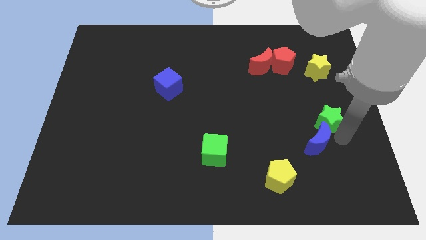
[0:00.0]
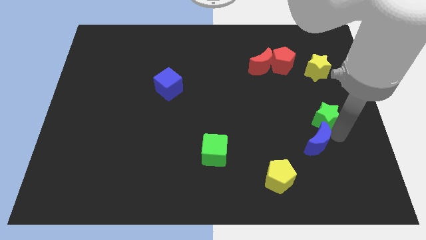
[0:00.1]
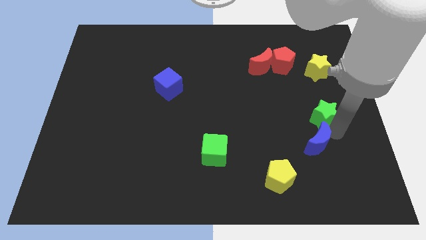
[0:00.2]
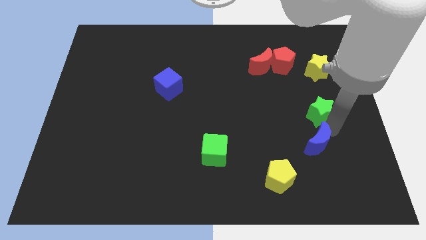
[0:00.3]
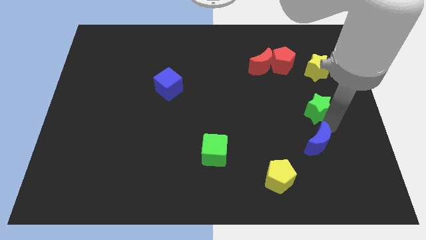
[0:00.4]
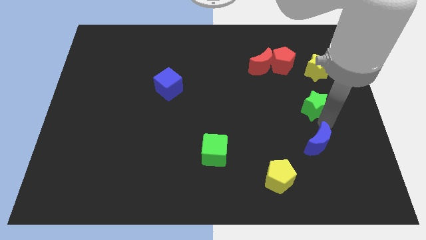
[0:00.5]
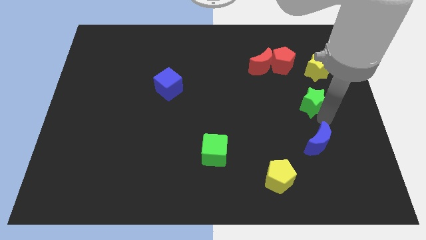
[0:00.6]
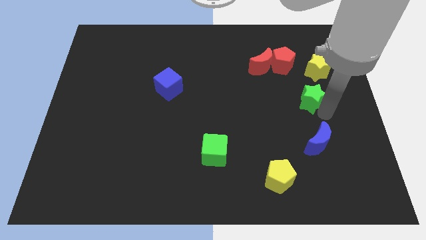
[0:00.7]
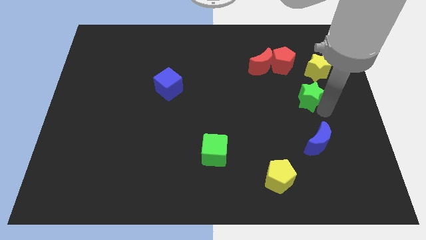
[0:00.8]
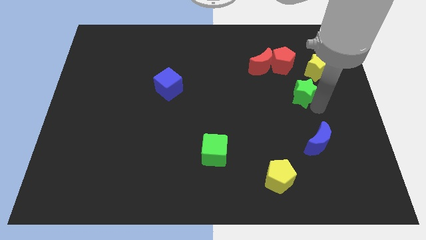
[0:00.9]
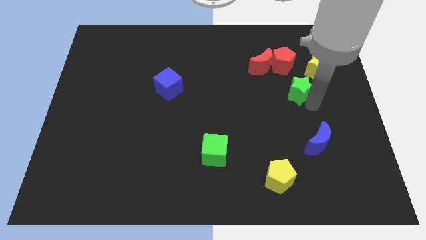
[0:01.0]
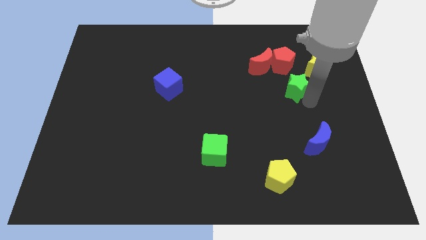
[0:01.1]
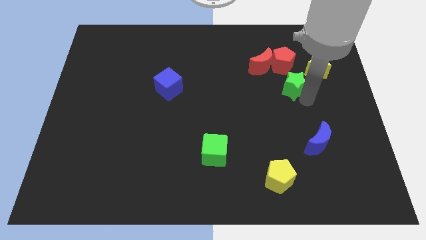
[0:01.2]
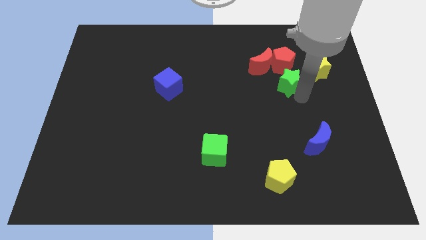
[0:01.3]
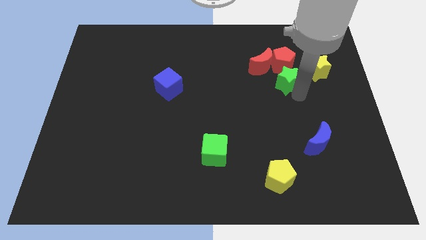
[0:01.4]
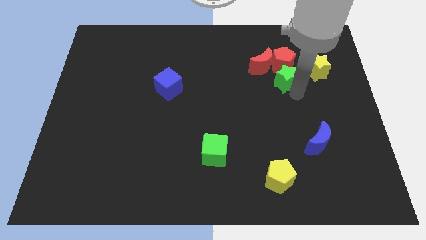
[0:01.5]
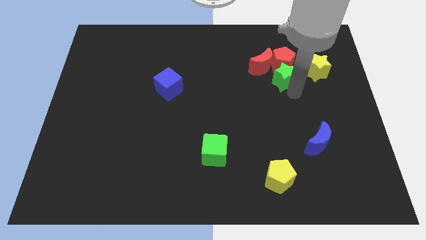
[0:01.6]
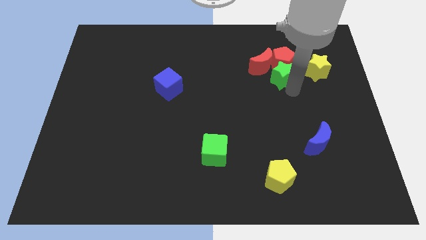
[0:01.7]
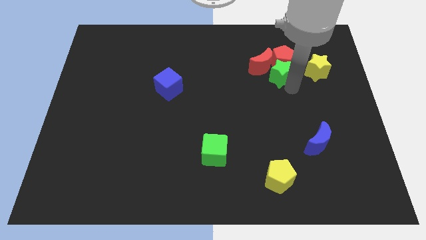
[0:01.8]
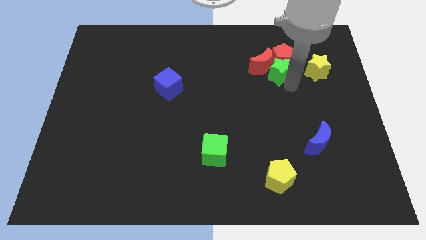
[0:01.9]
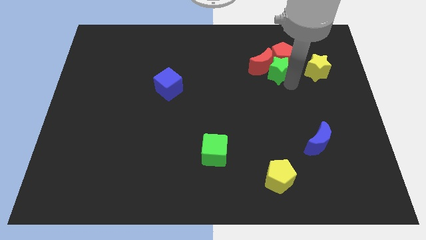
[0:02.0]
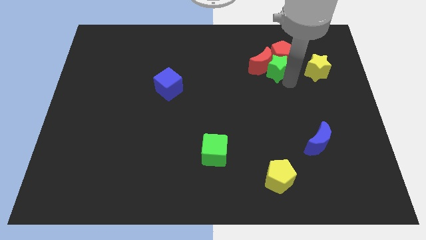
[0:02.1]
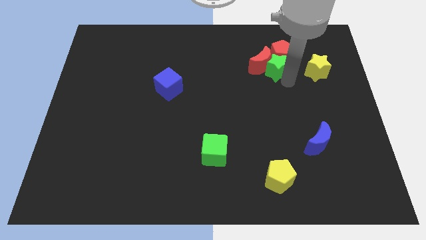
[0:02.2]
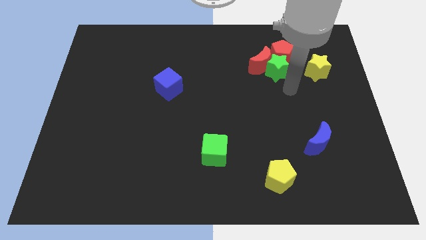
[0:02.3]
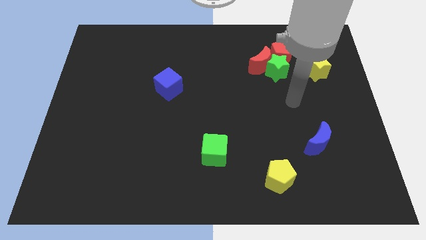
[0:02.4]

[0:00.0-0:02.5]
move the green star towards the red pentagon

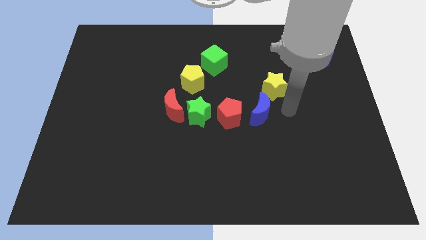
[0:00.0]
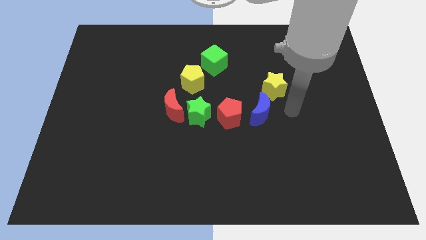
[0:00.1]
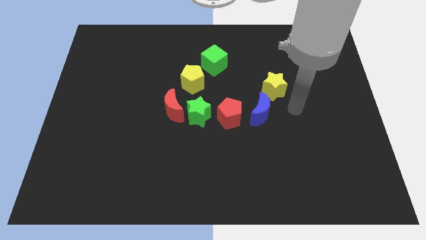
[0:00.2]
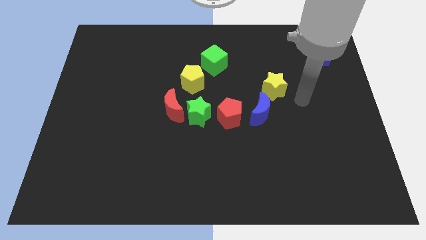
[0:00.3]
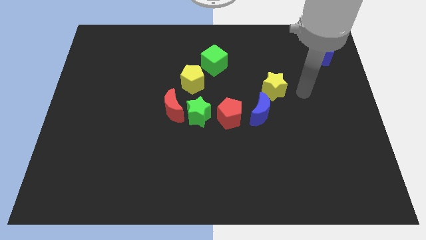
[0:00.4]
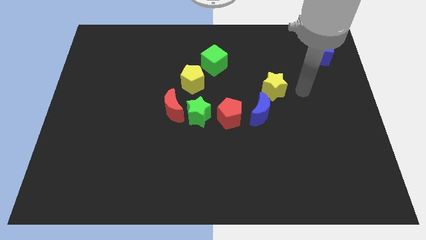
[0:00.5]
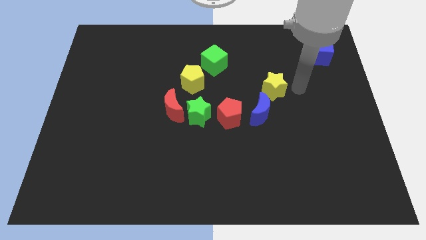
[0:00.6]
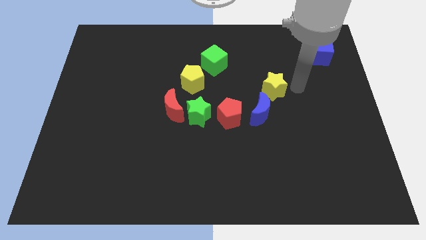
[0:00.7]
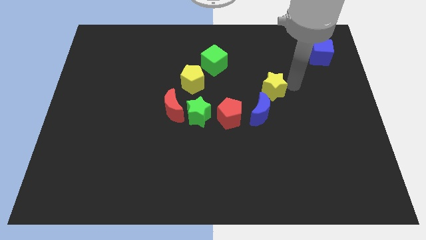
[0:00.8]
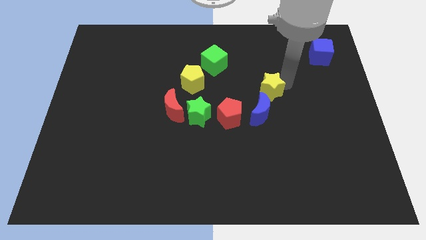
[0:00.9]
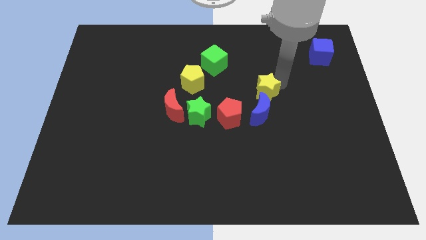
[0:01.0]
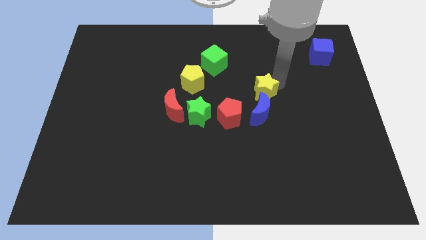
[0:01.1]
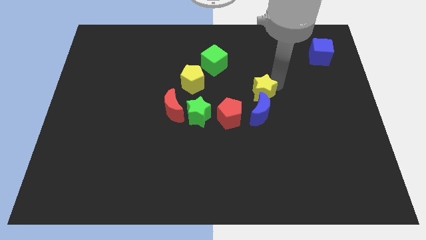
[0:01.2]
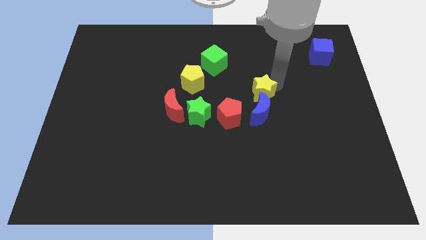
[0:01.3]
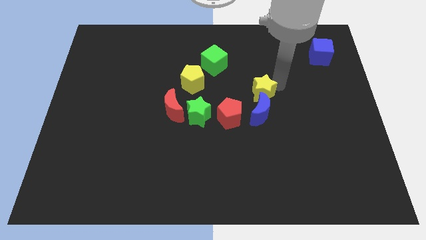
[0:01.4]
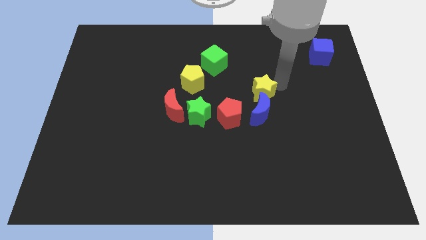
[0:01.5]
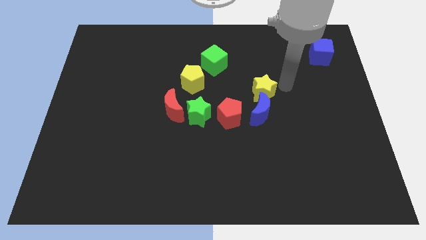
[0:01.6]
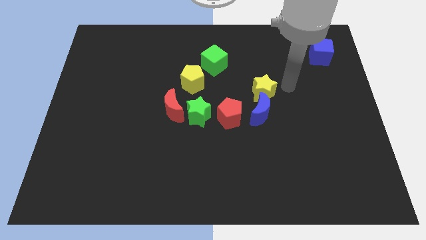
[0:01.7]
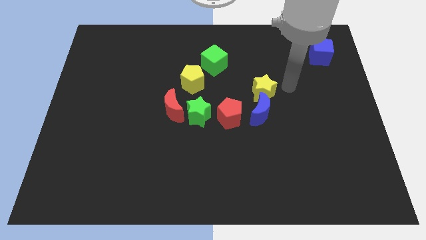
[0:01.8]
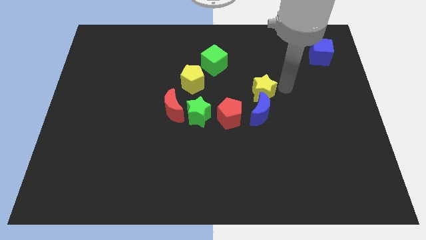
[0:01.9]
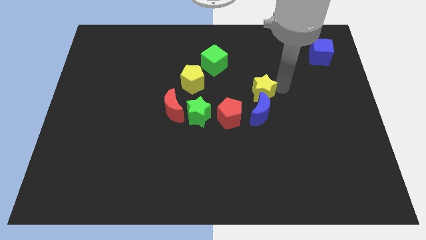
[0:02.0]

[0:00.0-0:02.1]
place yellow star below blue crescent

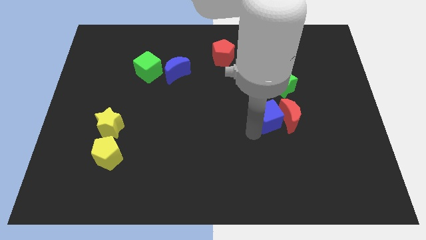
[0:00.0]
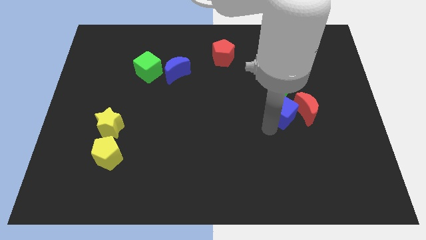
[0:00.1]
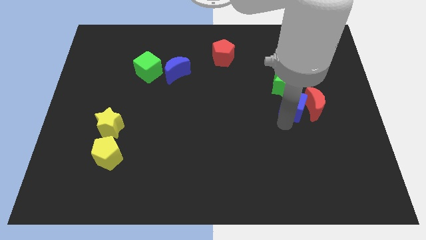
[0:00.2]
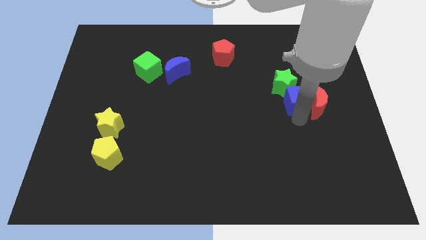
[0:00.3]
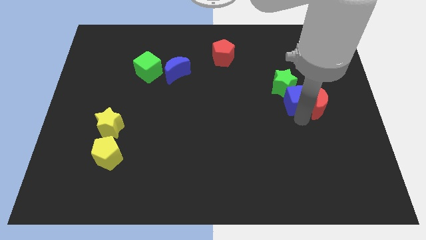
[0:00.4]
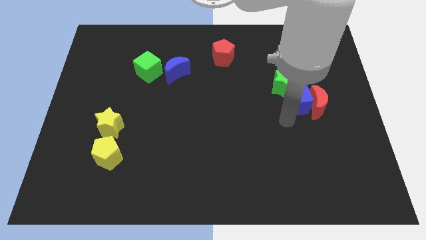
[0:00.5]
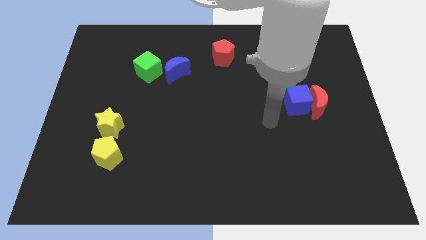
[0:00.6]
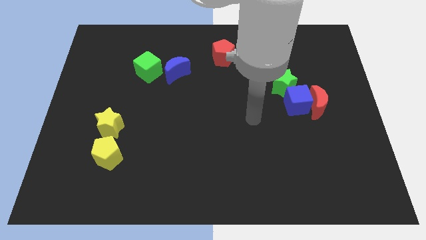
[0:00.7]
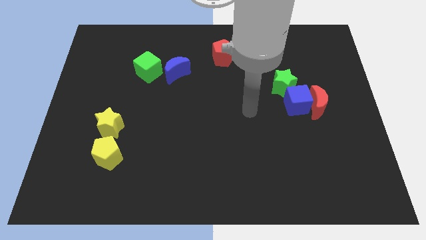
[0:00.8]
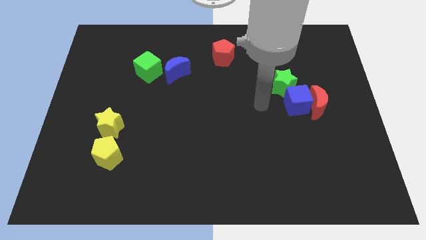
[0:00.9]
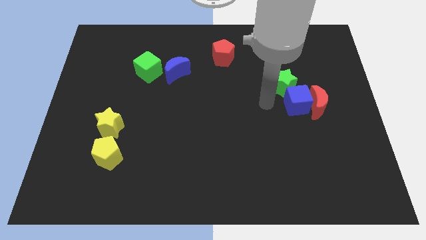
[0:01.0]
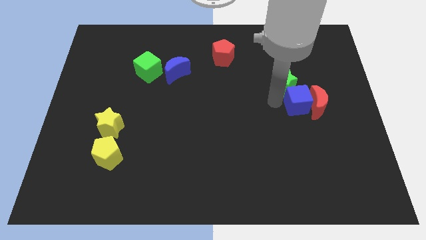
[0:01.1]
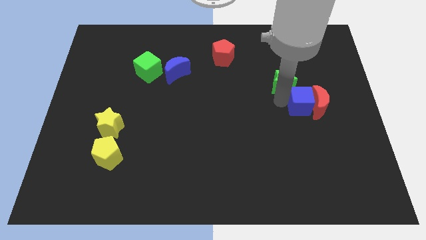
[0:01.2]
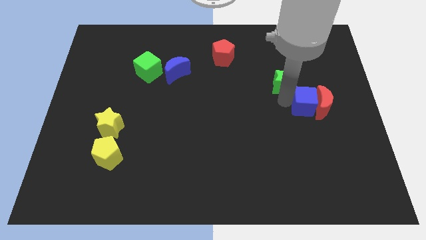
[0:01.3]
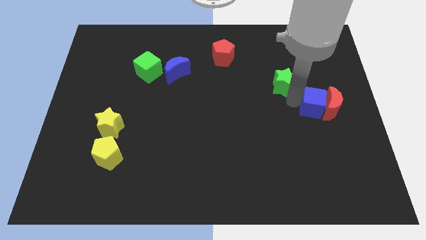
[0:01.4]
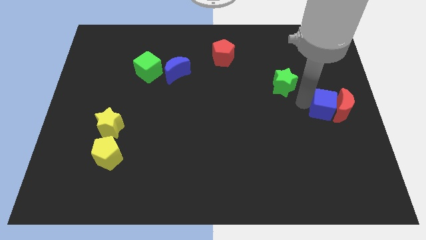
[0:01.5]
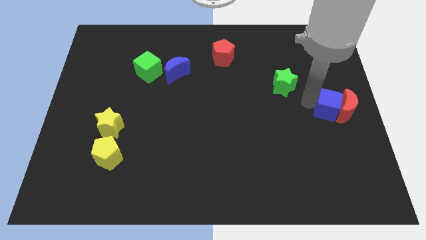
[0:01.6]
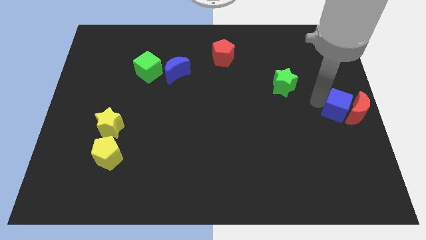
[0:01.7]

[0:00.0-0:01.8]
slide the red moon and the blue cube diagonally bottom right to the green star

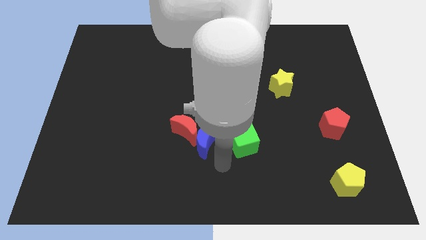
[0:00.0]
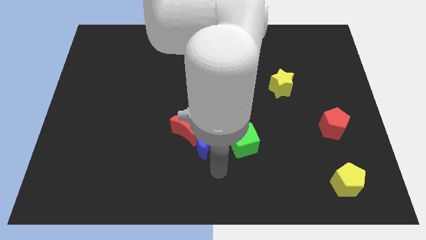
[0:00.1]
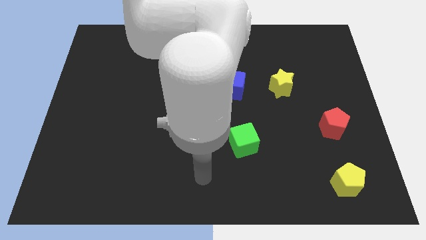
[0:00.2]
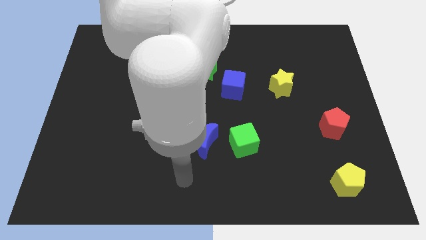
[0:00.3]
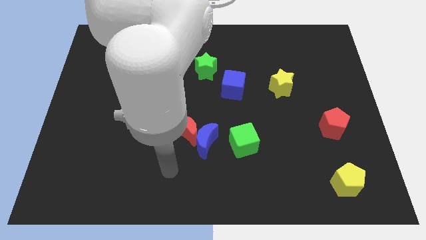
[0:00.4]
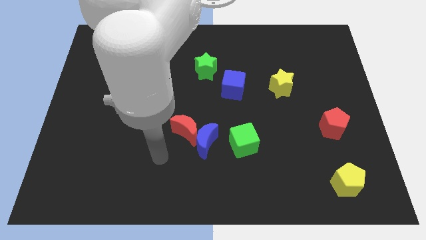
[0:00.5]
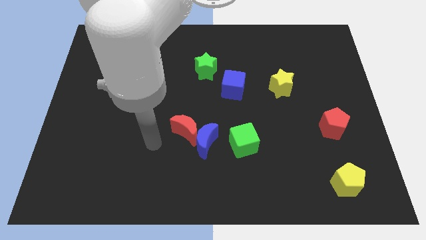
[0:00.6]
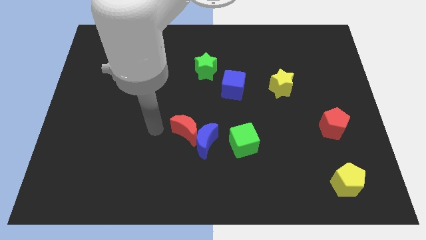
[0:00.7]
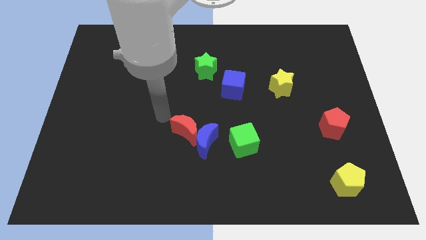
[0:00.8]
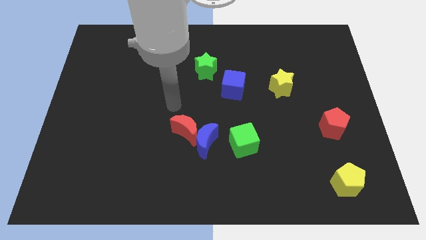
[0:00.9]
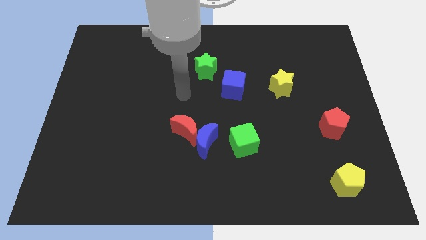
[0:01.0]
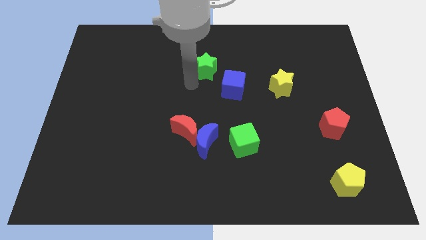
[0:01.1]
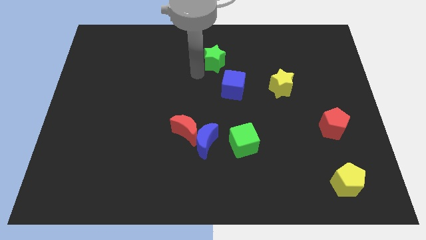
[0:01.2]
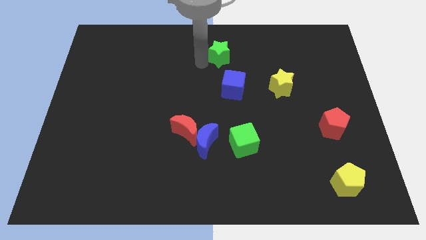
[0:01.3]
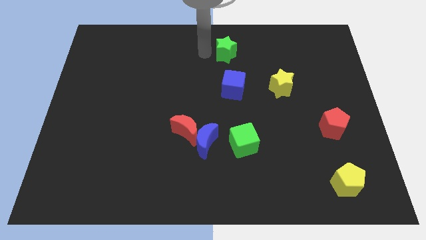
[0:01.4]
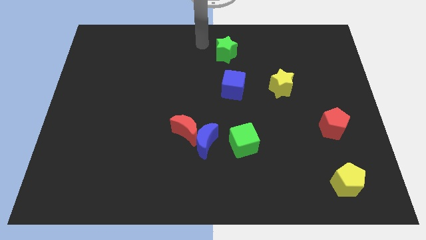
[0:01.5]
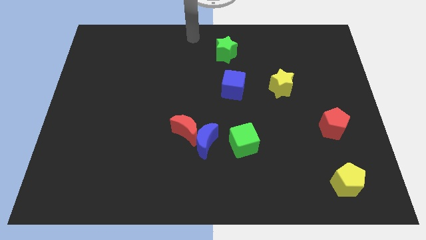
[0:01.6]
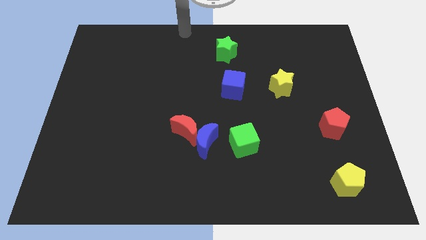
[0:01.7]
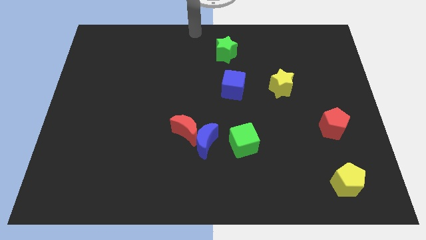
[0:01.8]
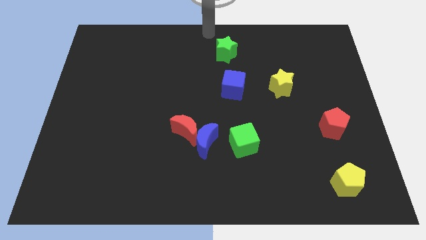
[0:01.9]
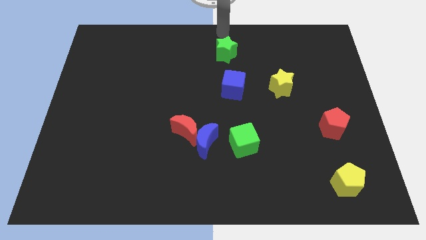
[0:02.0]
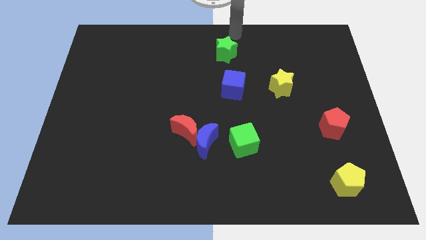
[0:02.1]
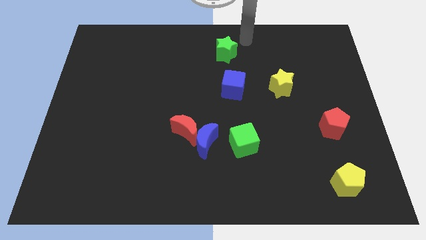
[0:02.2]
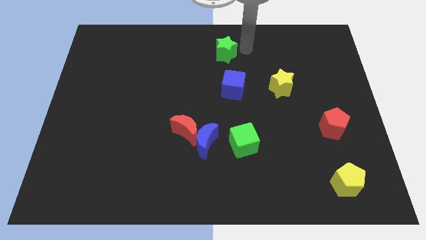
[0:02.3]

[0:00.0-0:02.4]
push the green star towards the center top of the board
